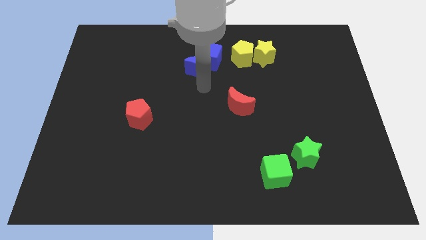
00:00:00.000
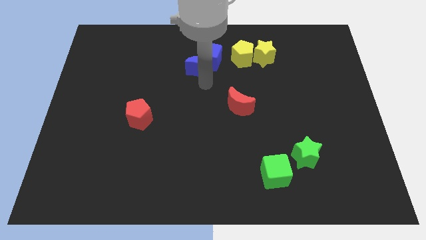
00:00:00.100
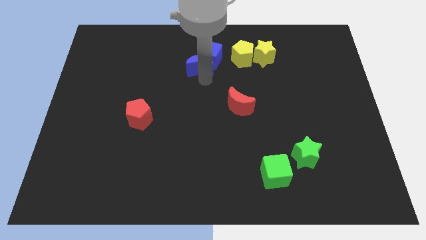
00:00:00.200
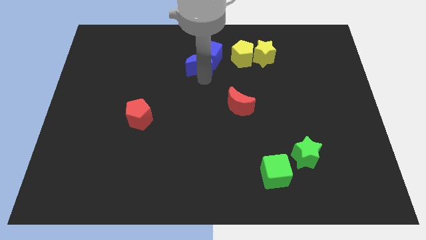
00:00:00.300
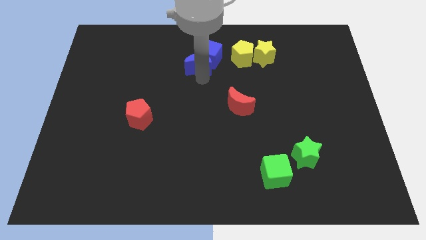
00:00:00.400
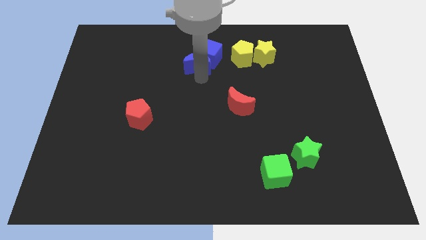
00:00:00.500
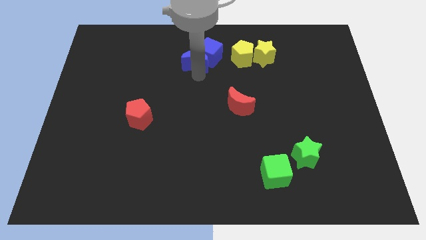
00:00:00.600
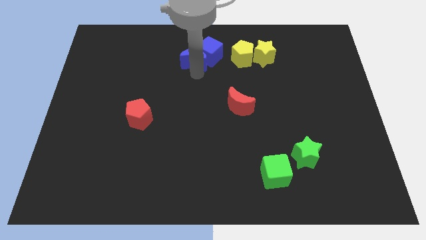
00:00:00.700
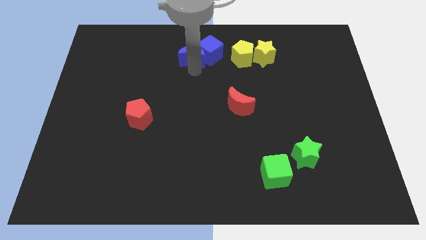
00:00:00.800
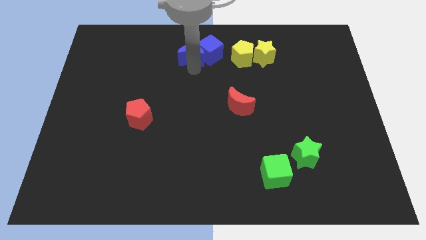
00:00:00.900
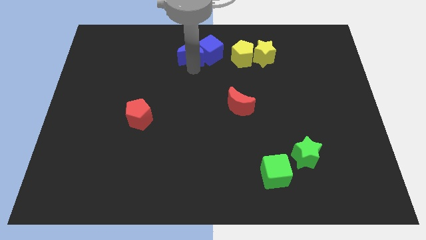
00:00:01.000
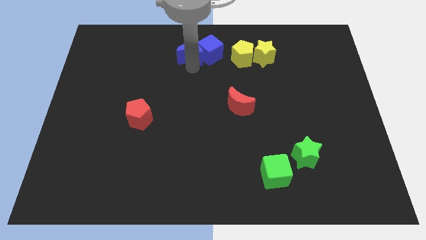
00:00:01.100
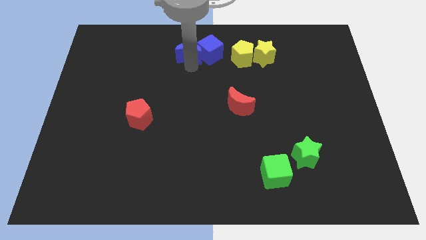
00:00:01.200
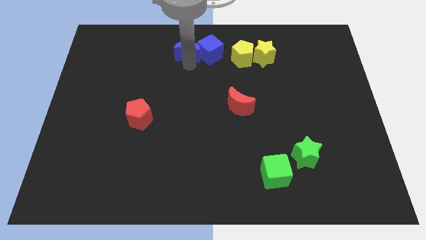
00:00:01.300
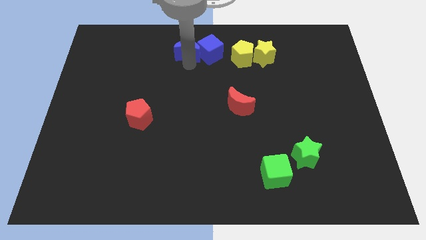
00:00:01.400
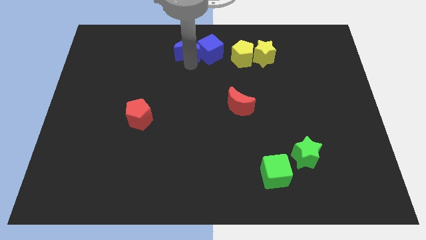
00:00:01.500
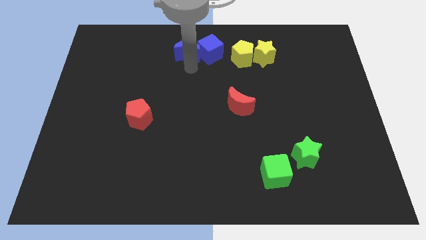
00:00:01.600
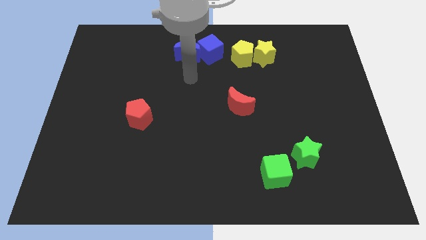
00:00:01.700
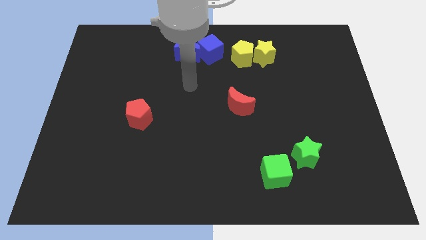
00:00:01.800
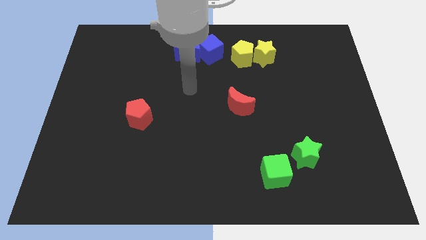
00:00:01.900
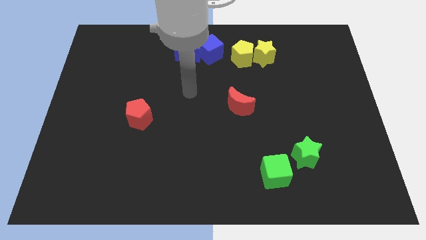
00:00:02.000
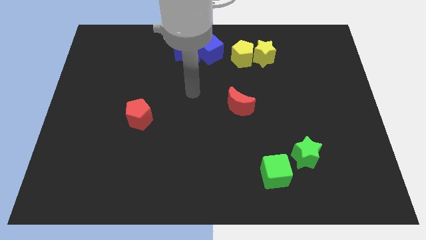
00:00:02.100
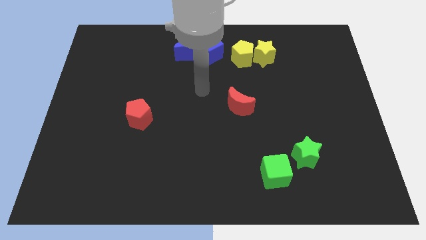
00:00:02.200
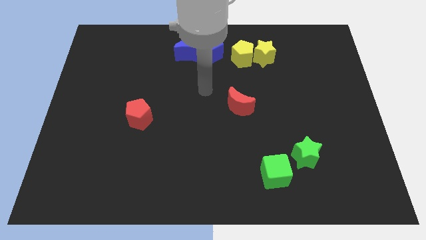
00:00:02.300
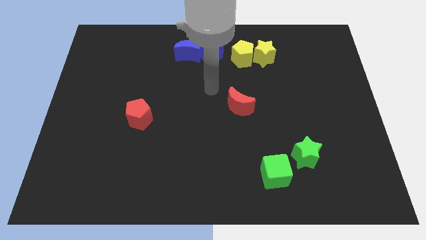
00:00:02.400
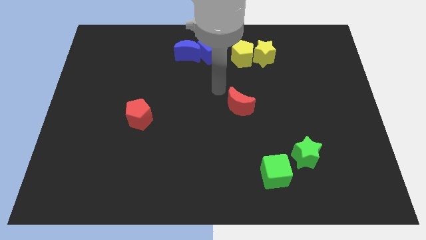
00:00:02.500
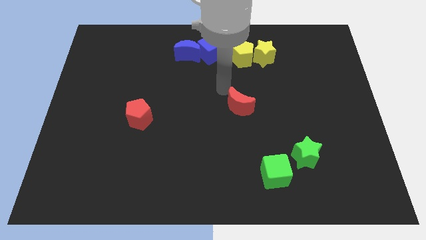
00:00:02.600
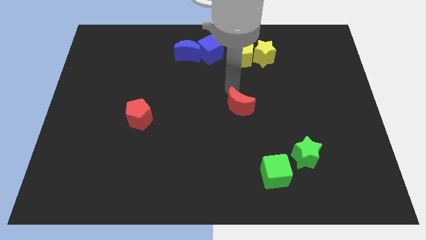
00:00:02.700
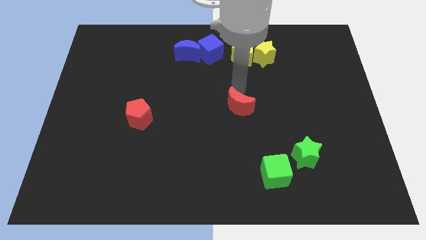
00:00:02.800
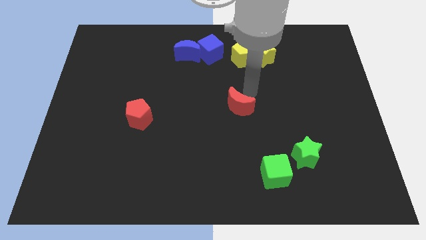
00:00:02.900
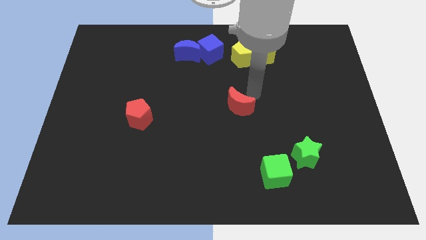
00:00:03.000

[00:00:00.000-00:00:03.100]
place the blue moon to the left of the blue cube

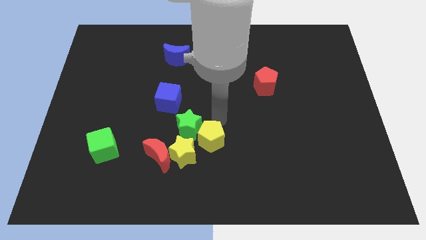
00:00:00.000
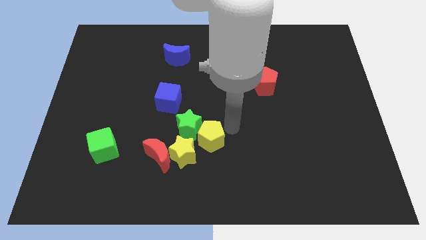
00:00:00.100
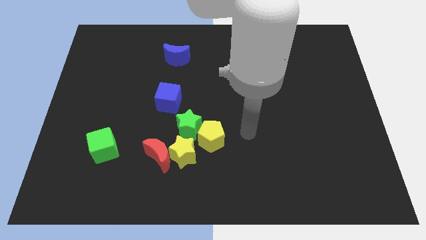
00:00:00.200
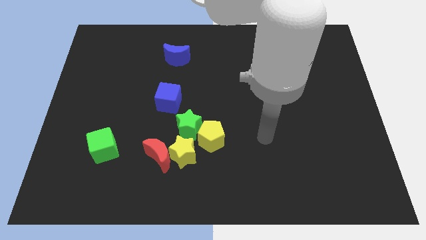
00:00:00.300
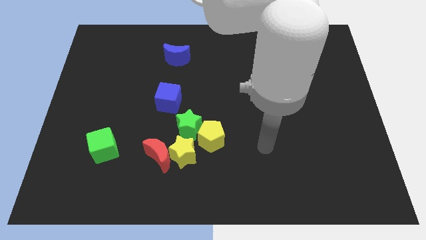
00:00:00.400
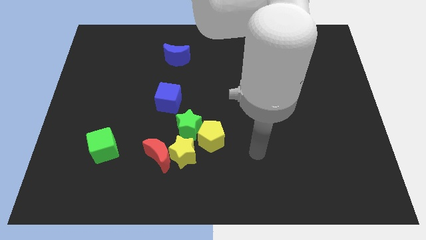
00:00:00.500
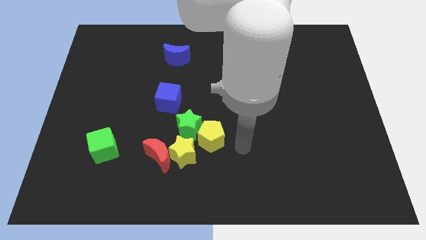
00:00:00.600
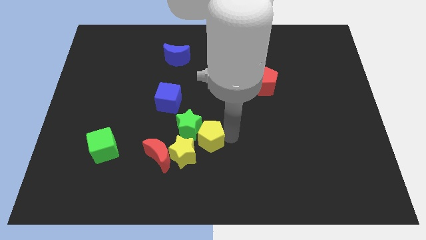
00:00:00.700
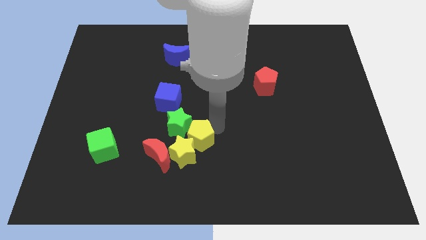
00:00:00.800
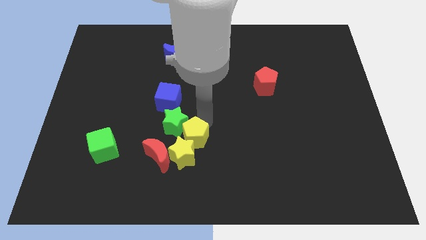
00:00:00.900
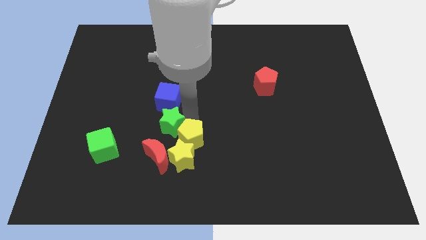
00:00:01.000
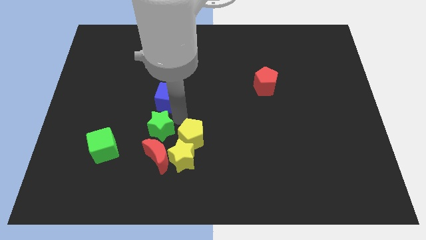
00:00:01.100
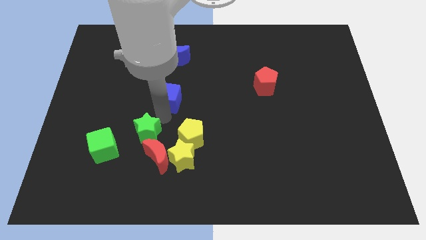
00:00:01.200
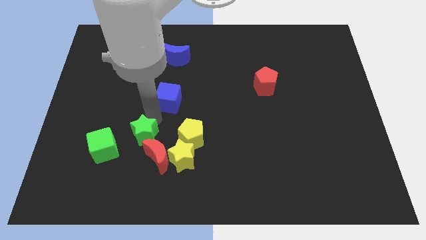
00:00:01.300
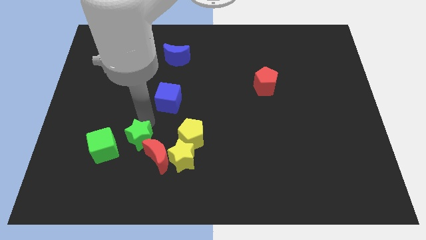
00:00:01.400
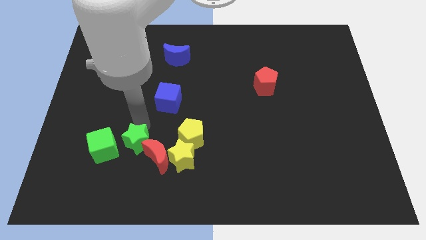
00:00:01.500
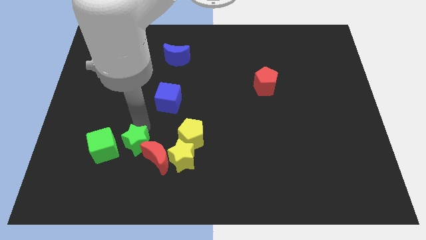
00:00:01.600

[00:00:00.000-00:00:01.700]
push the green star into the top left side of the red crescent

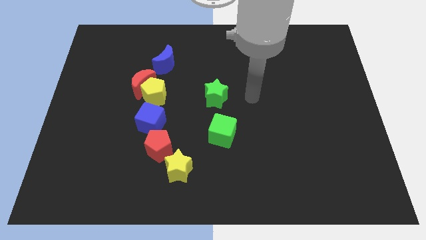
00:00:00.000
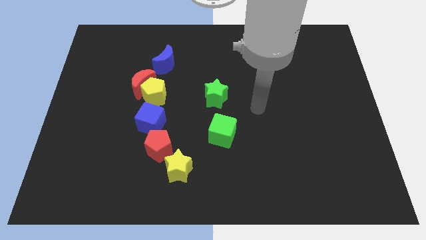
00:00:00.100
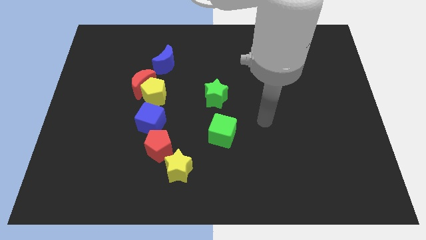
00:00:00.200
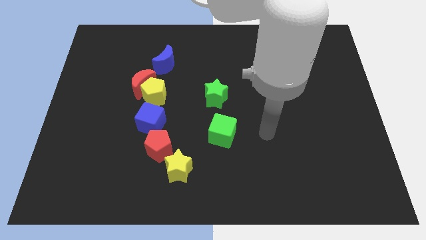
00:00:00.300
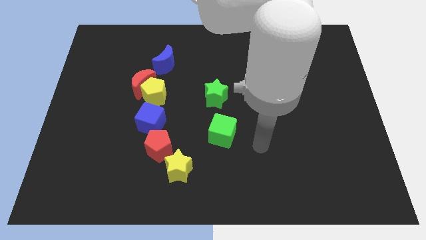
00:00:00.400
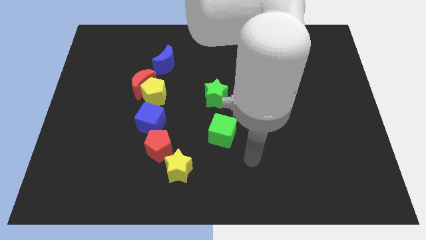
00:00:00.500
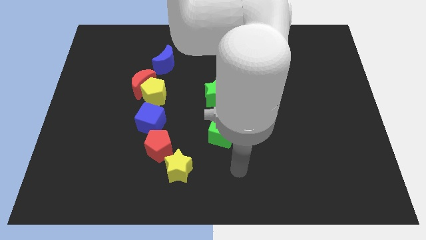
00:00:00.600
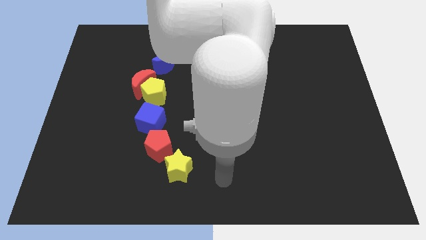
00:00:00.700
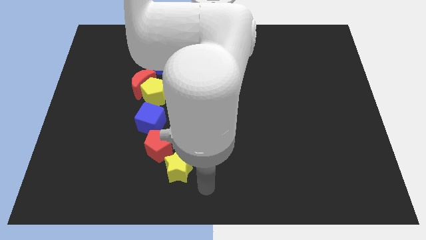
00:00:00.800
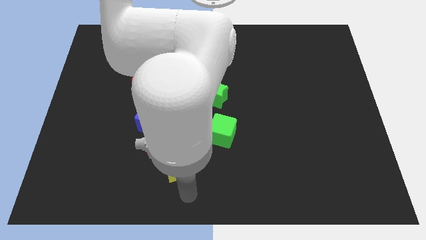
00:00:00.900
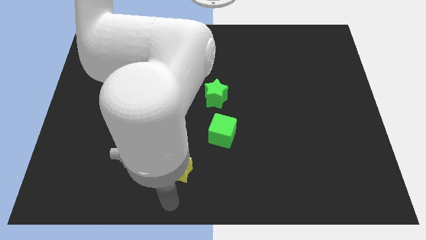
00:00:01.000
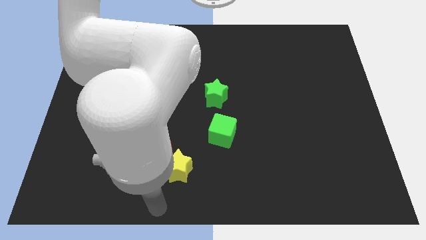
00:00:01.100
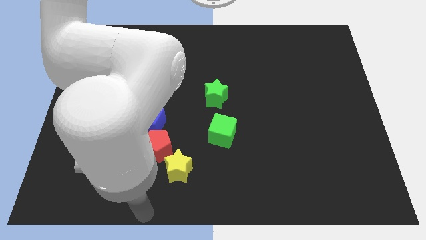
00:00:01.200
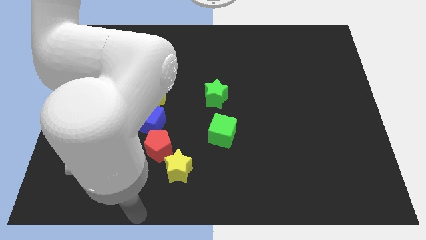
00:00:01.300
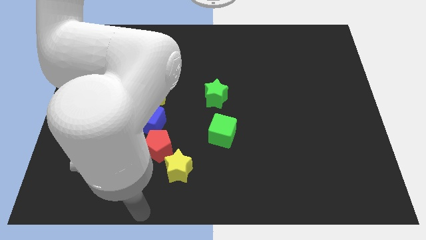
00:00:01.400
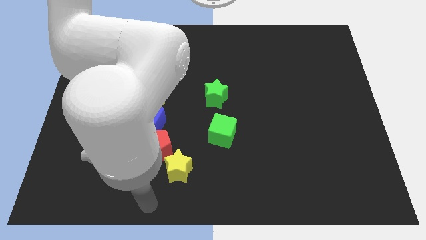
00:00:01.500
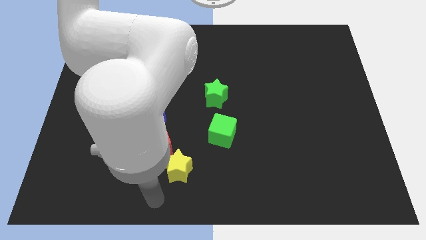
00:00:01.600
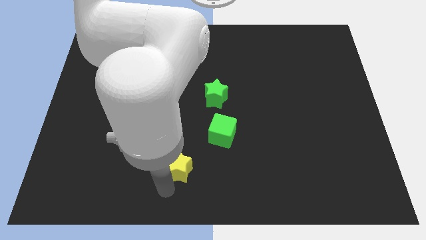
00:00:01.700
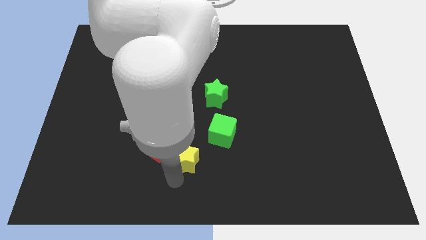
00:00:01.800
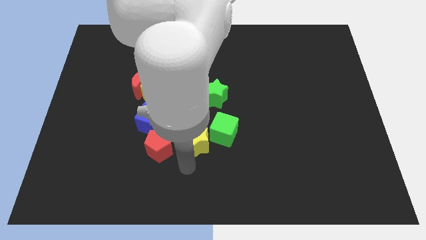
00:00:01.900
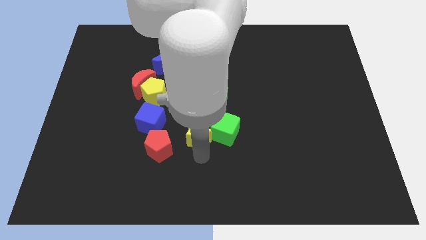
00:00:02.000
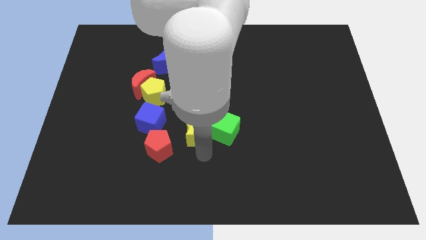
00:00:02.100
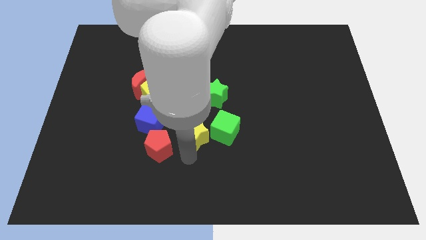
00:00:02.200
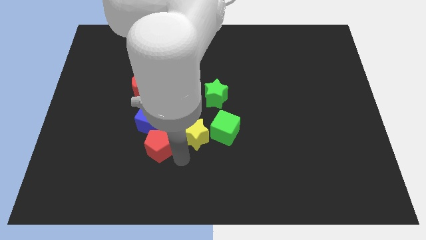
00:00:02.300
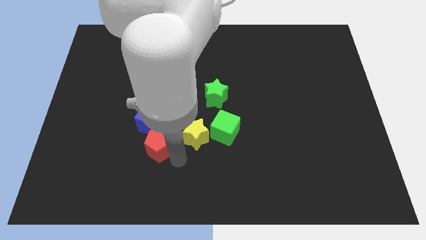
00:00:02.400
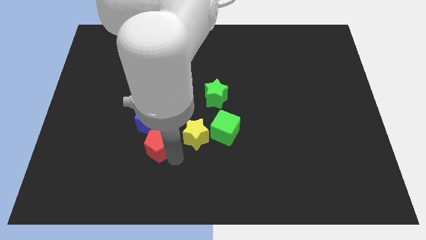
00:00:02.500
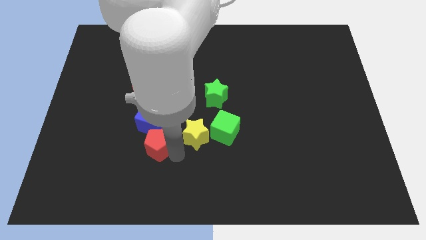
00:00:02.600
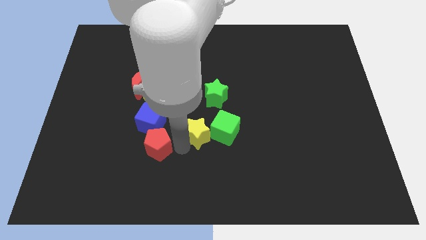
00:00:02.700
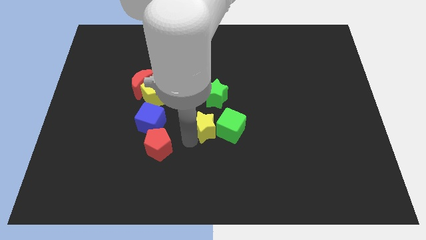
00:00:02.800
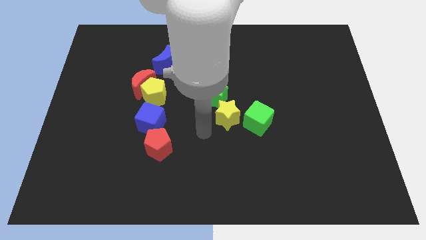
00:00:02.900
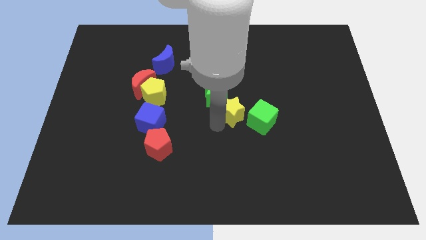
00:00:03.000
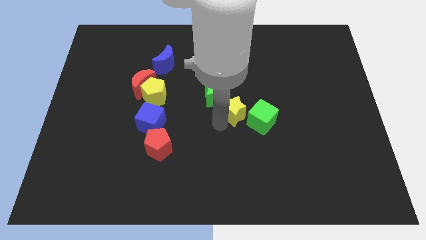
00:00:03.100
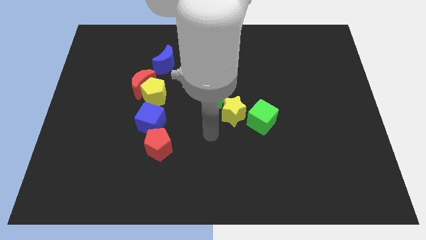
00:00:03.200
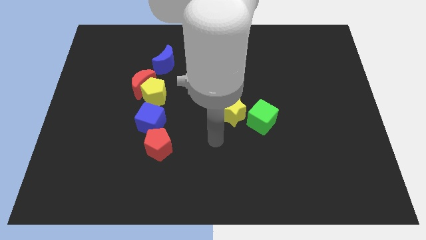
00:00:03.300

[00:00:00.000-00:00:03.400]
place the yellow star in between the green cube and green star

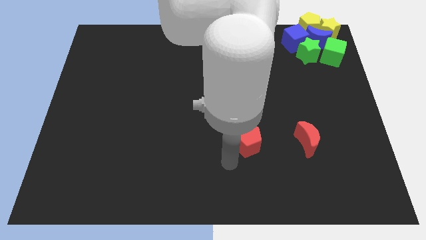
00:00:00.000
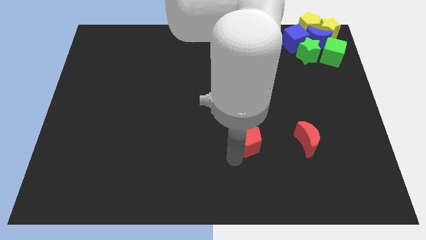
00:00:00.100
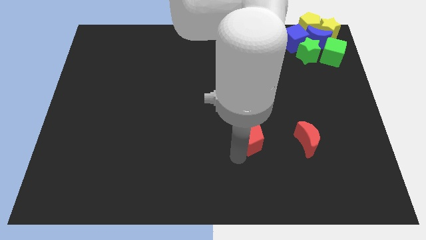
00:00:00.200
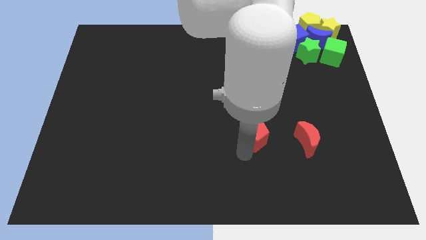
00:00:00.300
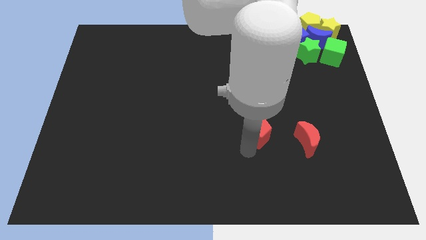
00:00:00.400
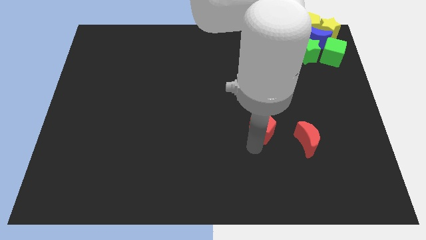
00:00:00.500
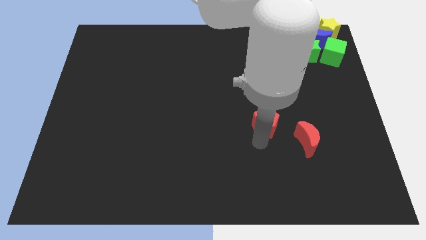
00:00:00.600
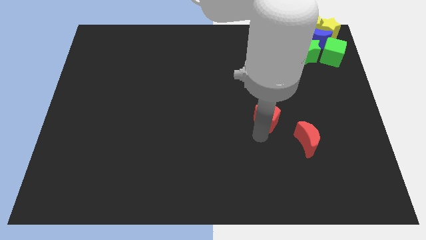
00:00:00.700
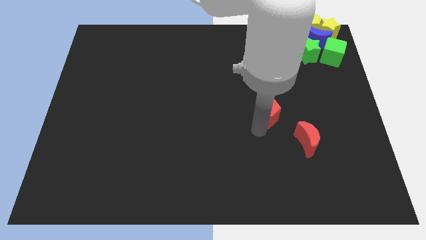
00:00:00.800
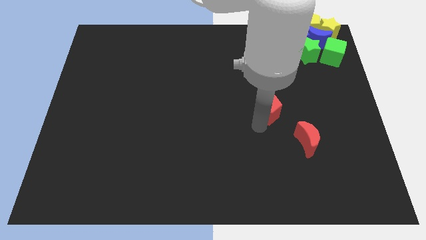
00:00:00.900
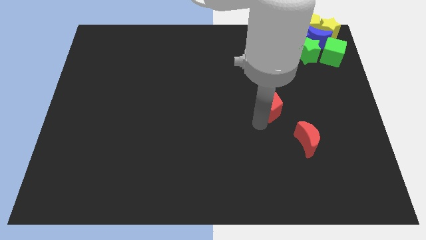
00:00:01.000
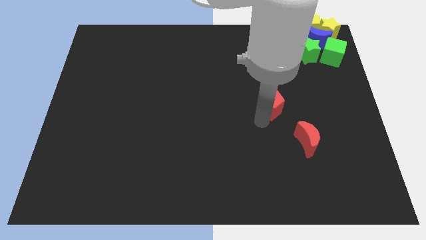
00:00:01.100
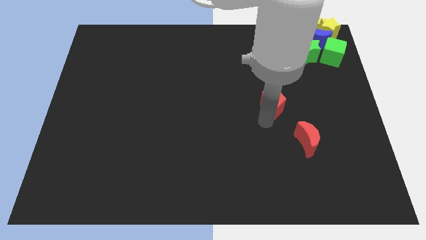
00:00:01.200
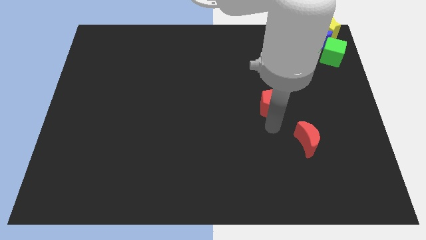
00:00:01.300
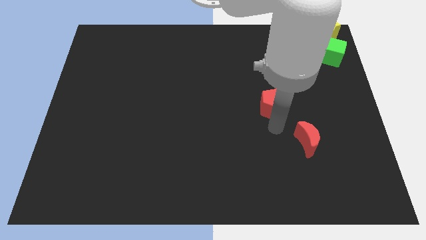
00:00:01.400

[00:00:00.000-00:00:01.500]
move red pentagon diagonally on the top left side of the red moon
